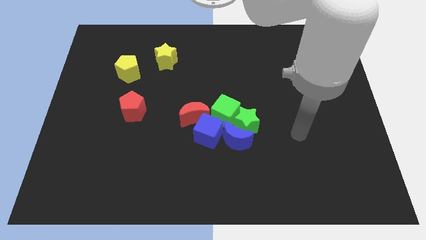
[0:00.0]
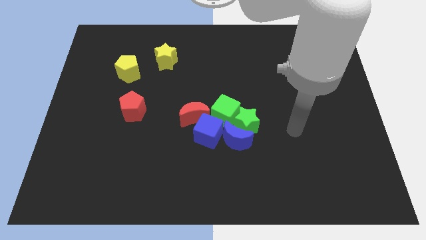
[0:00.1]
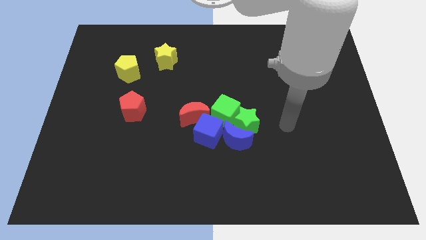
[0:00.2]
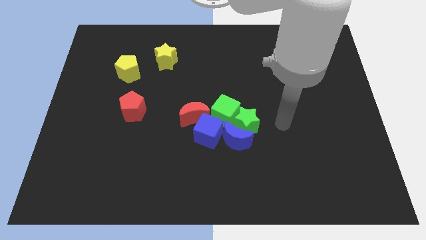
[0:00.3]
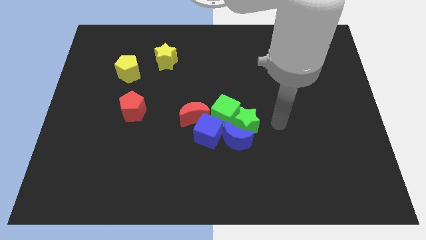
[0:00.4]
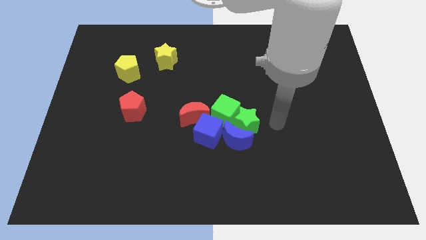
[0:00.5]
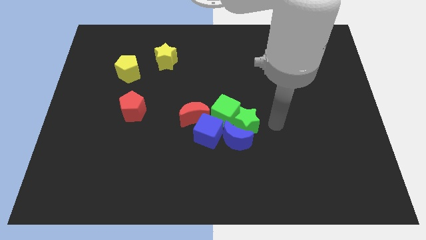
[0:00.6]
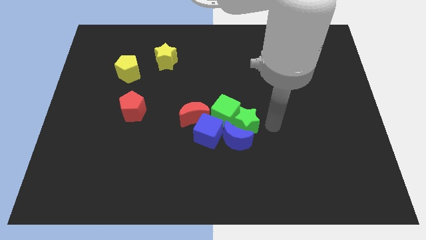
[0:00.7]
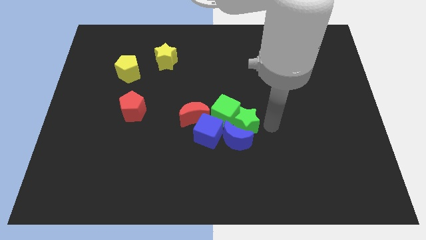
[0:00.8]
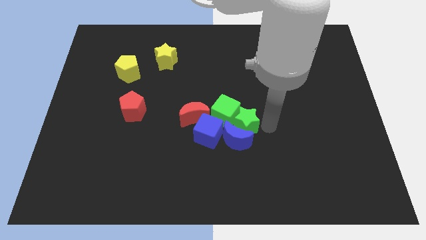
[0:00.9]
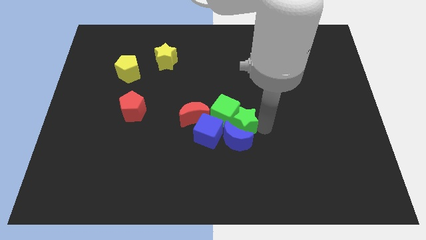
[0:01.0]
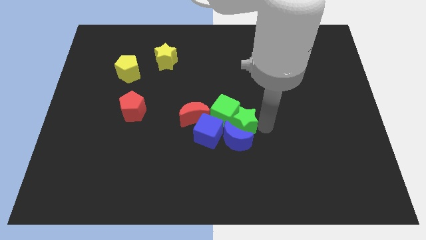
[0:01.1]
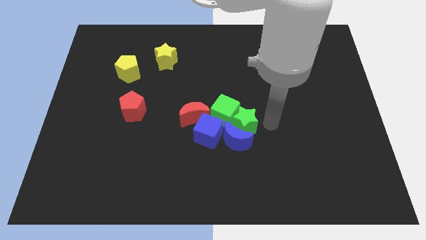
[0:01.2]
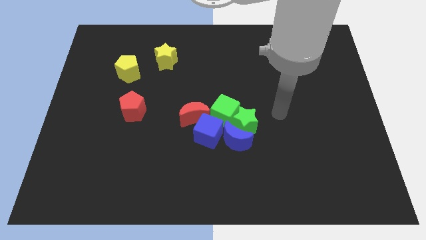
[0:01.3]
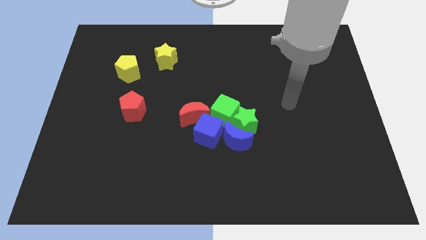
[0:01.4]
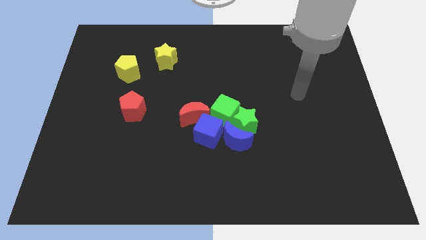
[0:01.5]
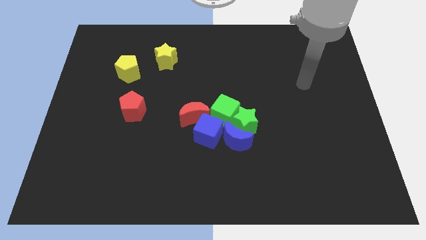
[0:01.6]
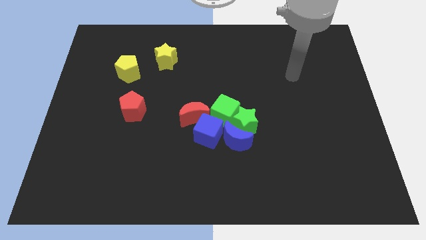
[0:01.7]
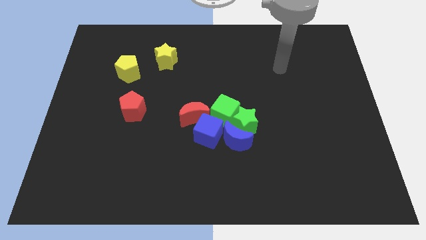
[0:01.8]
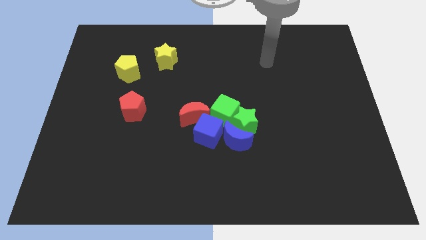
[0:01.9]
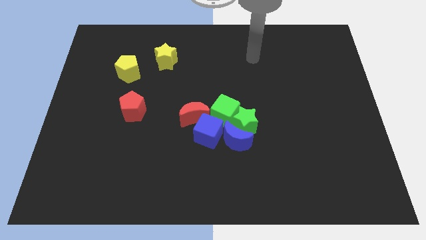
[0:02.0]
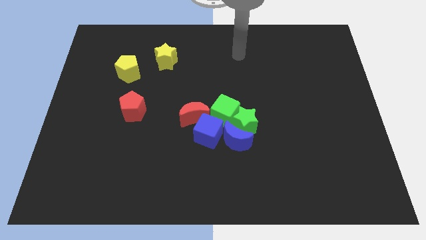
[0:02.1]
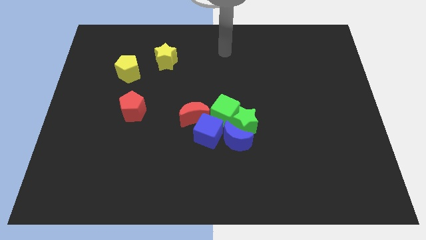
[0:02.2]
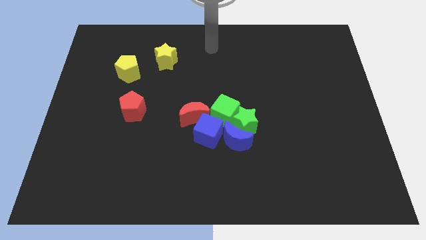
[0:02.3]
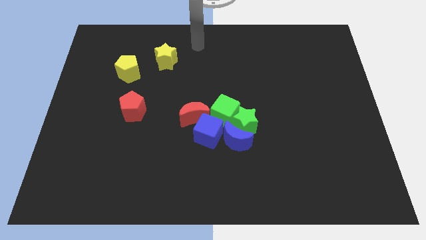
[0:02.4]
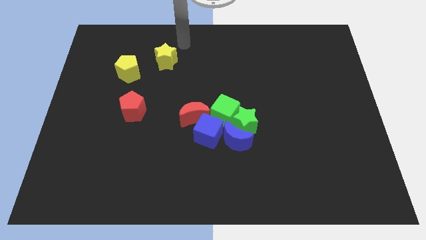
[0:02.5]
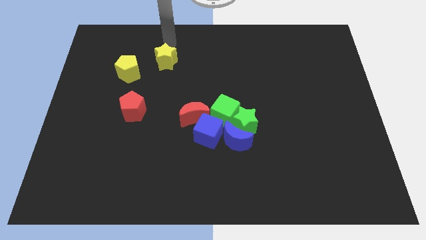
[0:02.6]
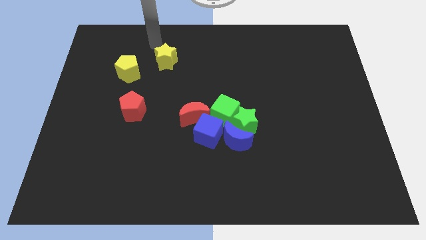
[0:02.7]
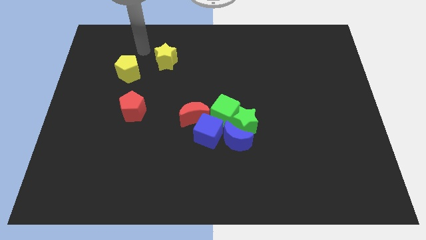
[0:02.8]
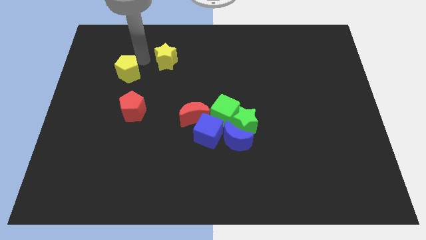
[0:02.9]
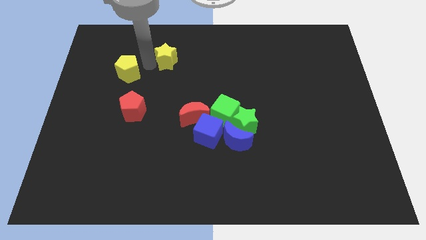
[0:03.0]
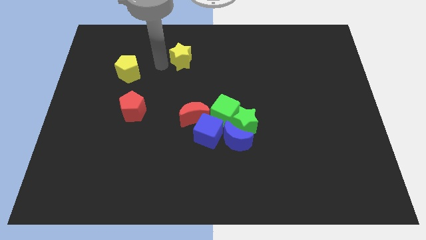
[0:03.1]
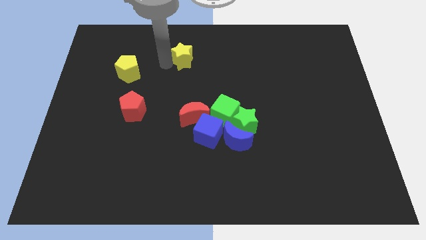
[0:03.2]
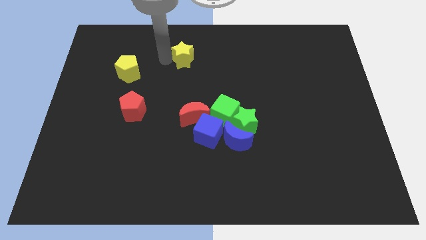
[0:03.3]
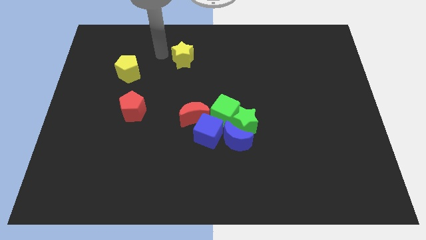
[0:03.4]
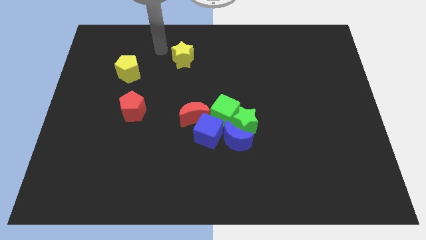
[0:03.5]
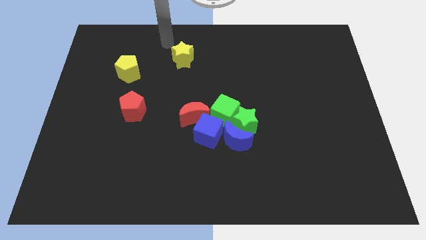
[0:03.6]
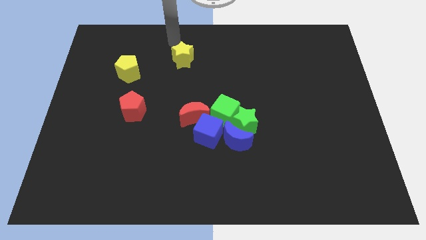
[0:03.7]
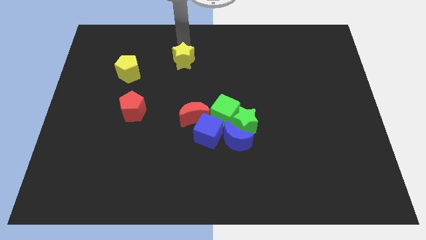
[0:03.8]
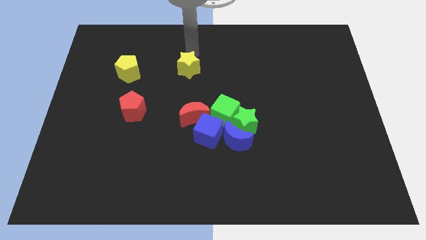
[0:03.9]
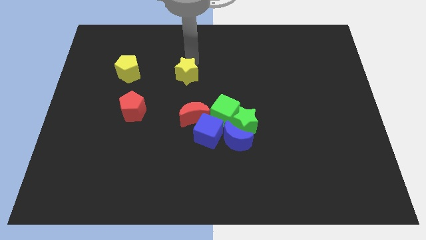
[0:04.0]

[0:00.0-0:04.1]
place the yellow star above the red moon

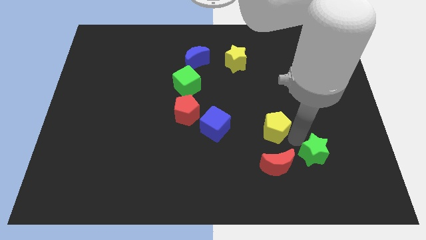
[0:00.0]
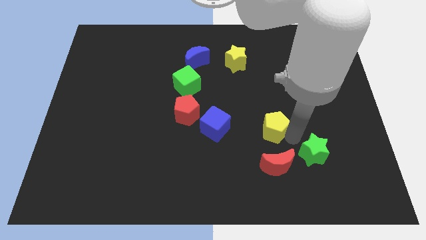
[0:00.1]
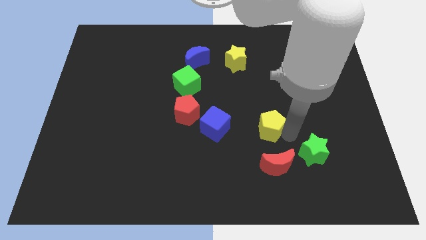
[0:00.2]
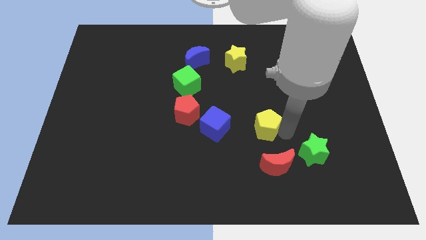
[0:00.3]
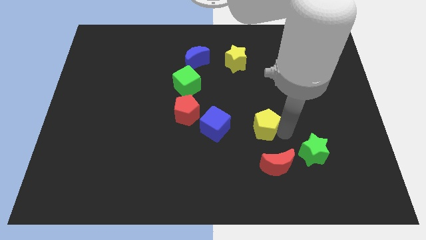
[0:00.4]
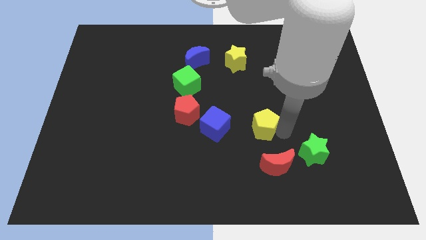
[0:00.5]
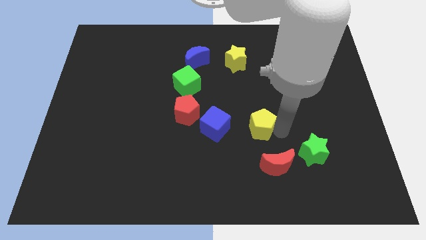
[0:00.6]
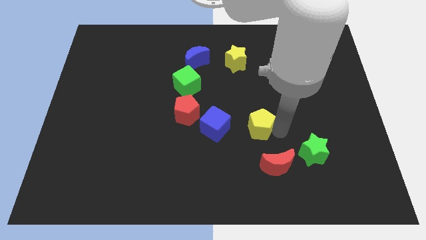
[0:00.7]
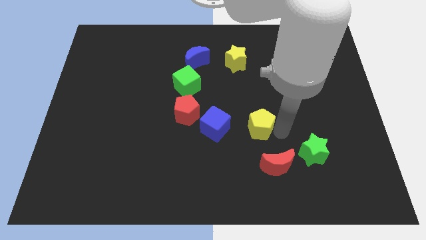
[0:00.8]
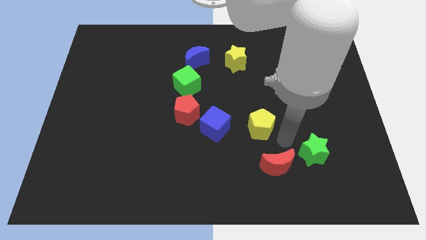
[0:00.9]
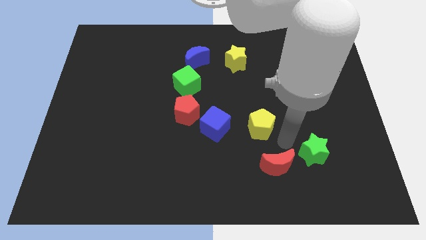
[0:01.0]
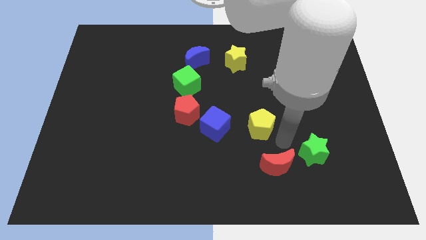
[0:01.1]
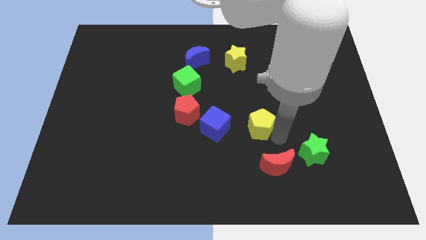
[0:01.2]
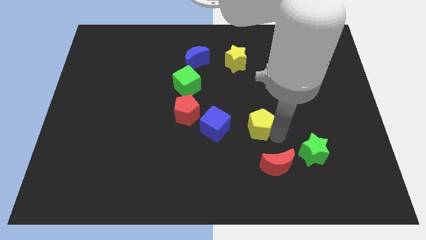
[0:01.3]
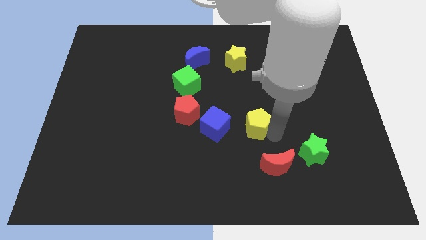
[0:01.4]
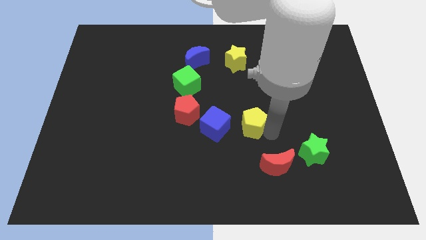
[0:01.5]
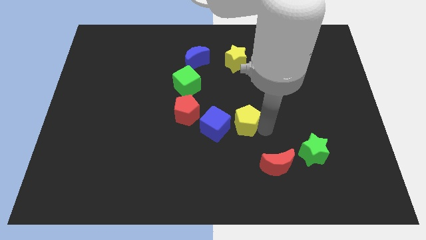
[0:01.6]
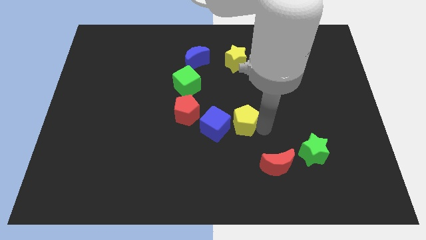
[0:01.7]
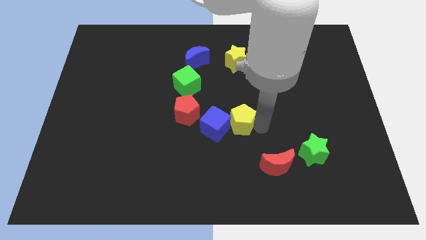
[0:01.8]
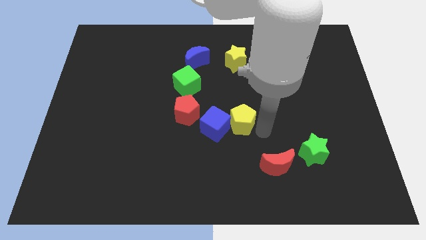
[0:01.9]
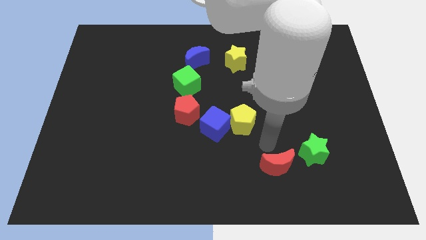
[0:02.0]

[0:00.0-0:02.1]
push the yellow pentagon into the blue cube

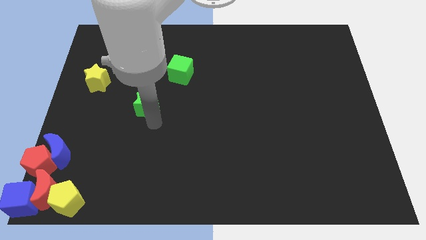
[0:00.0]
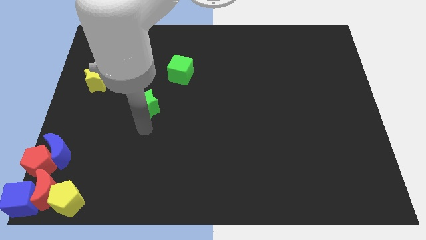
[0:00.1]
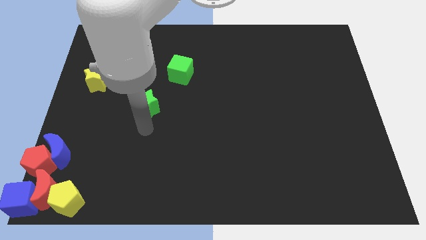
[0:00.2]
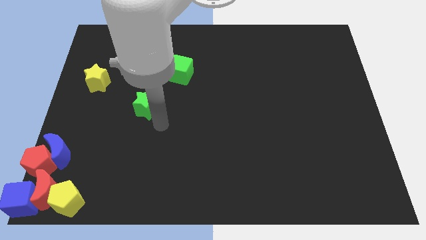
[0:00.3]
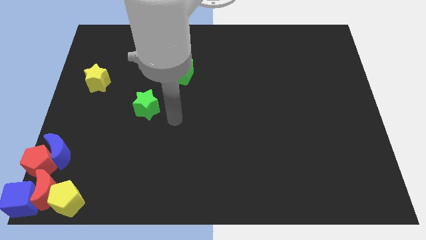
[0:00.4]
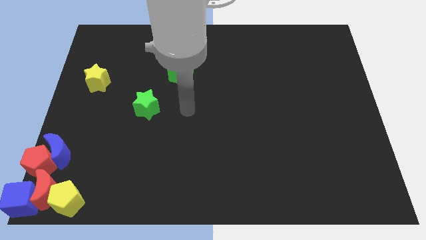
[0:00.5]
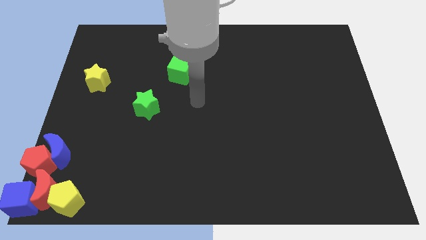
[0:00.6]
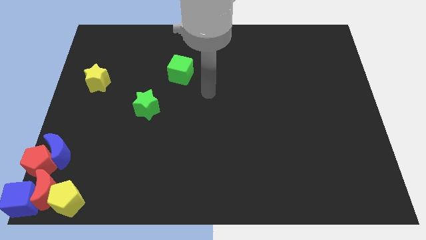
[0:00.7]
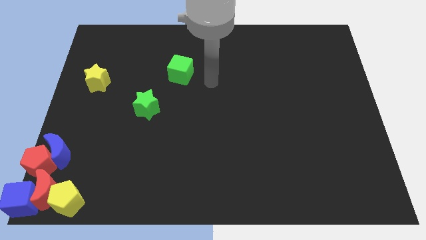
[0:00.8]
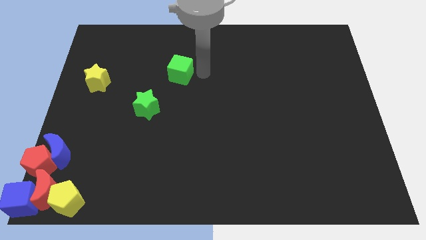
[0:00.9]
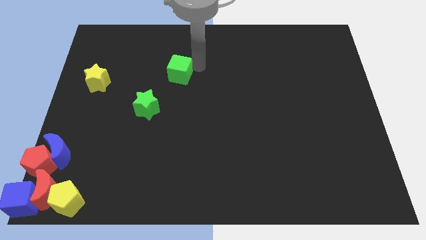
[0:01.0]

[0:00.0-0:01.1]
move your arm to the top right of the green cube

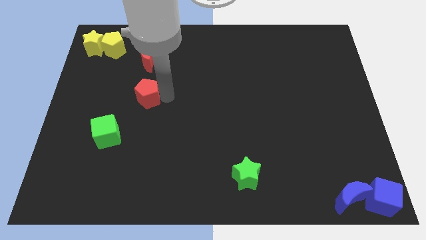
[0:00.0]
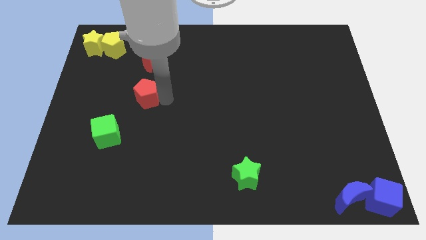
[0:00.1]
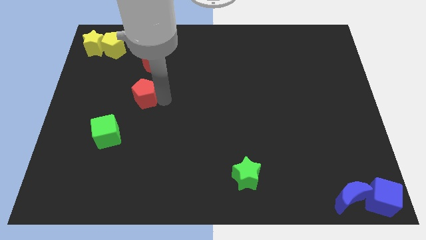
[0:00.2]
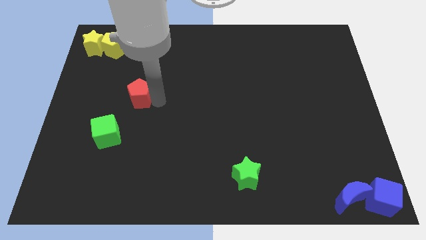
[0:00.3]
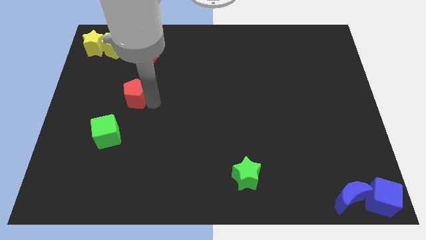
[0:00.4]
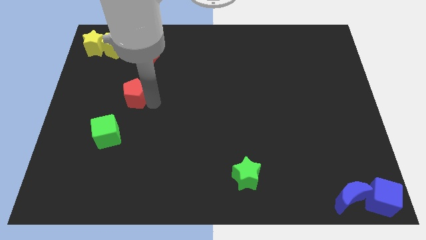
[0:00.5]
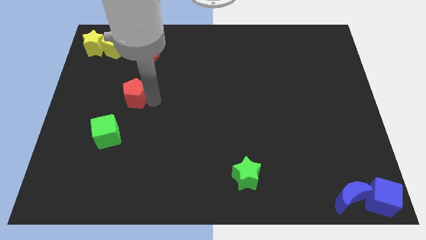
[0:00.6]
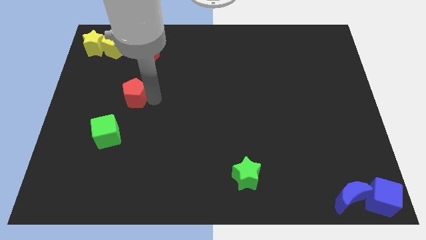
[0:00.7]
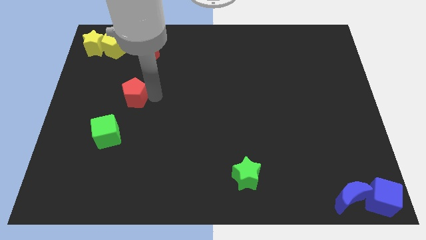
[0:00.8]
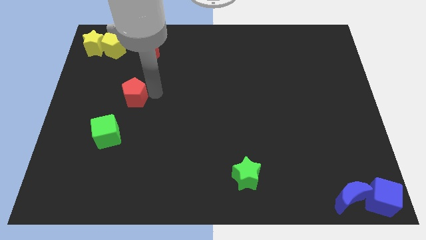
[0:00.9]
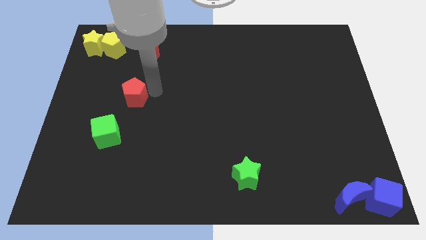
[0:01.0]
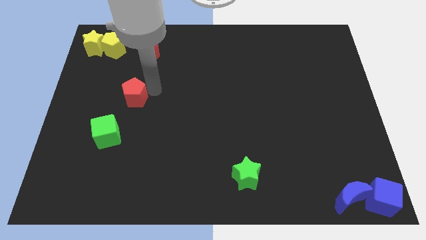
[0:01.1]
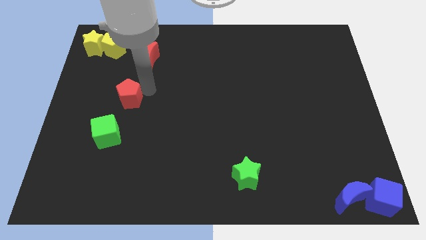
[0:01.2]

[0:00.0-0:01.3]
place the red pentagon in between the green cube and red crescent

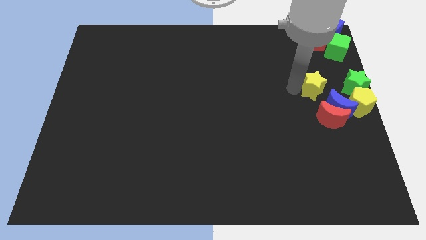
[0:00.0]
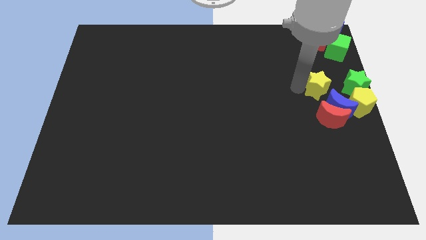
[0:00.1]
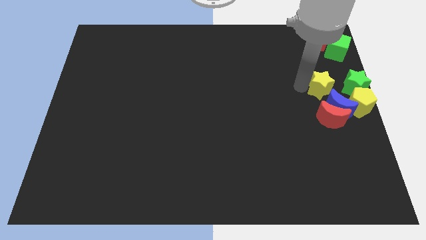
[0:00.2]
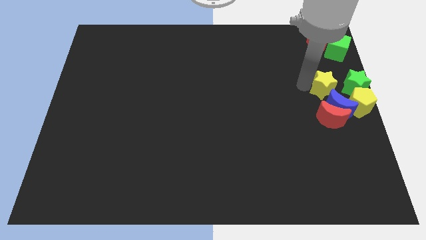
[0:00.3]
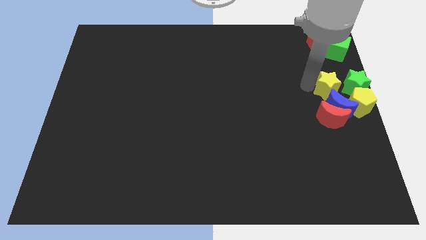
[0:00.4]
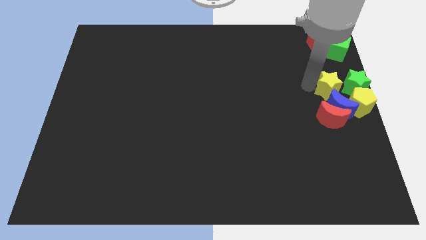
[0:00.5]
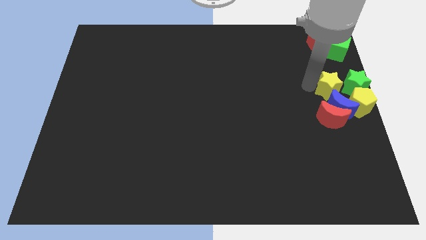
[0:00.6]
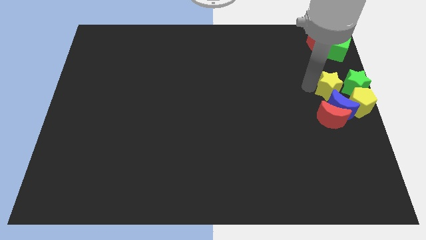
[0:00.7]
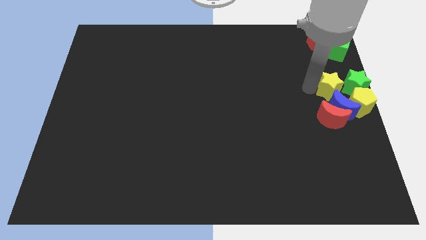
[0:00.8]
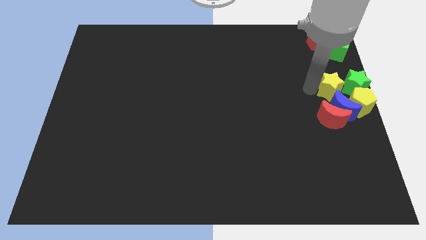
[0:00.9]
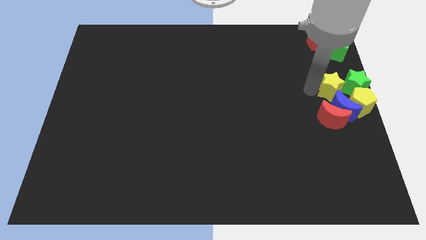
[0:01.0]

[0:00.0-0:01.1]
place the yellow star left to the green star
